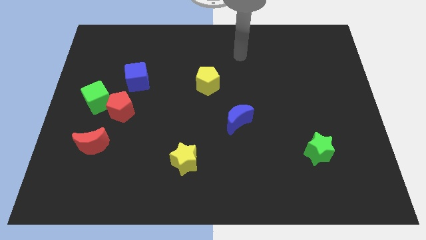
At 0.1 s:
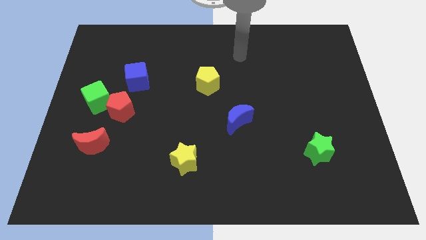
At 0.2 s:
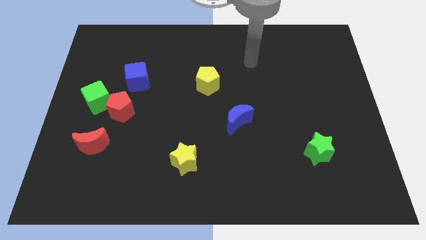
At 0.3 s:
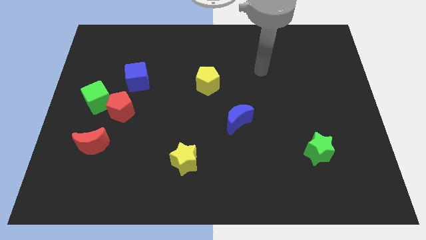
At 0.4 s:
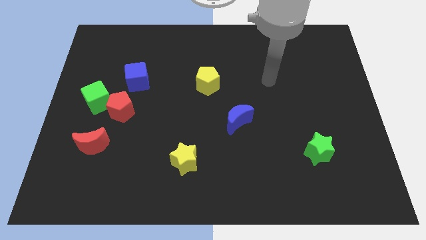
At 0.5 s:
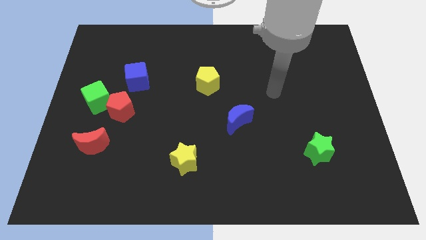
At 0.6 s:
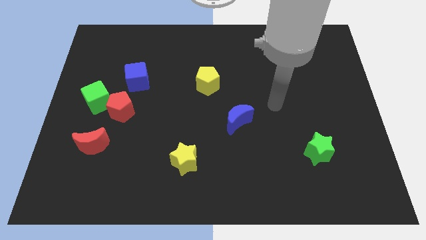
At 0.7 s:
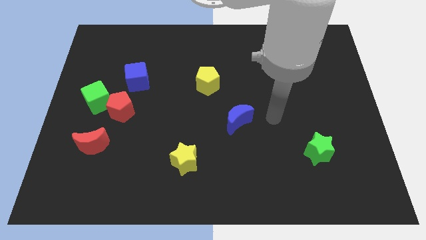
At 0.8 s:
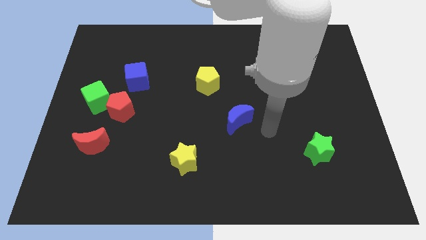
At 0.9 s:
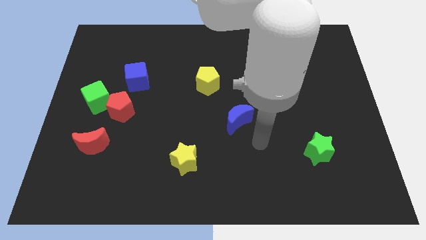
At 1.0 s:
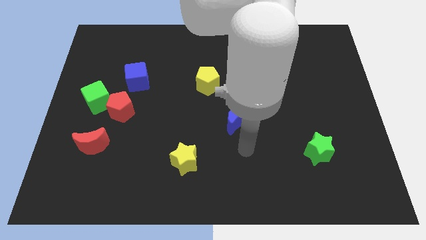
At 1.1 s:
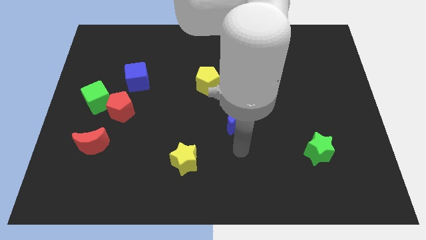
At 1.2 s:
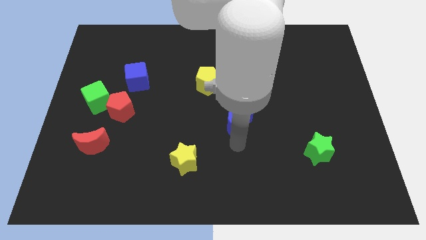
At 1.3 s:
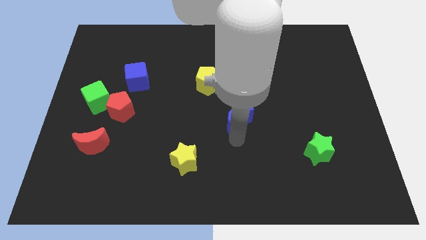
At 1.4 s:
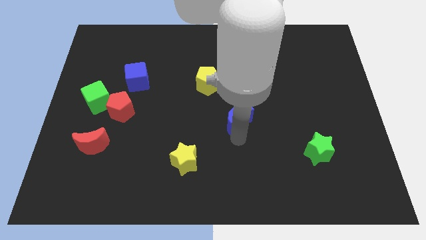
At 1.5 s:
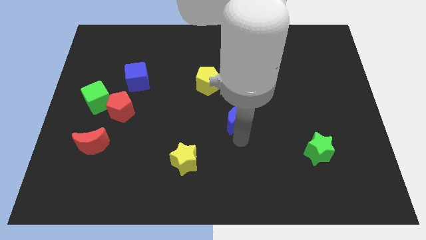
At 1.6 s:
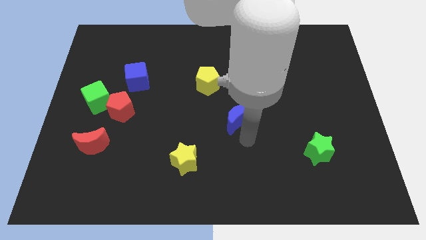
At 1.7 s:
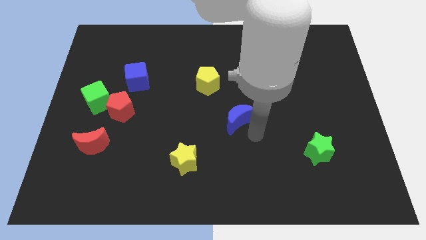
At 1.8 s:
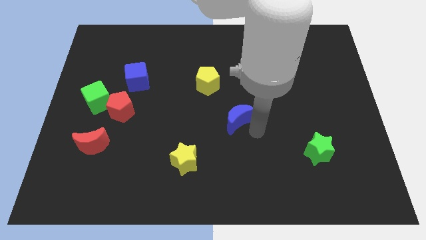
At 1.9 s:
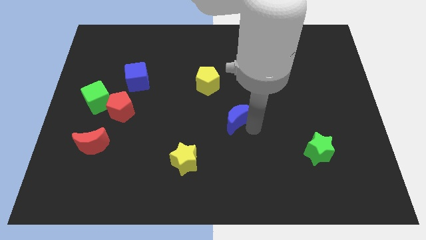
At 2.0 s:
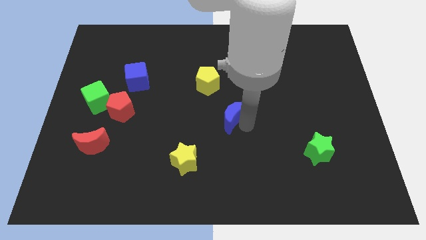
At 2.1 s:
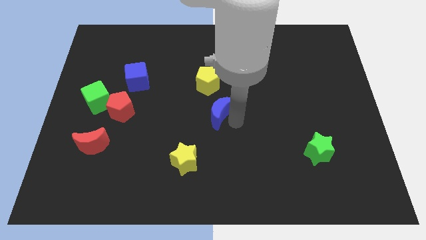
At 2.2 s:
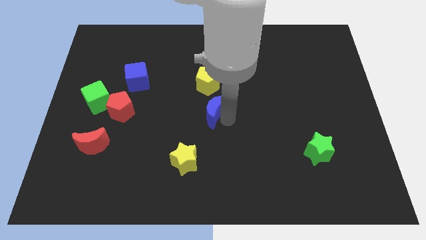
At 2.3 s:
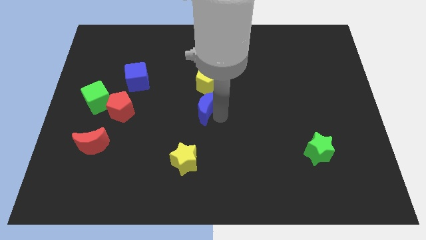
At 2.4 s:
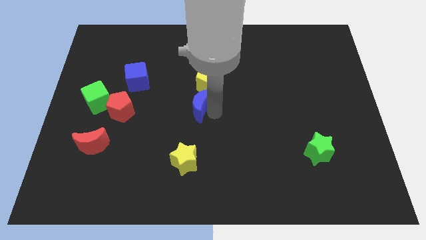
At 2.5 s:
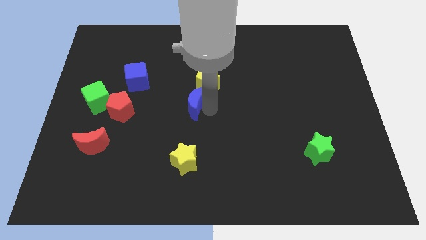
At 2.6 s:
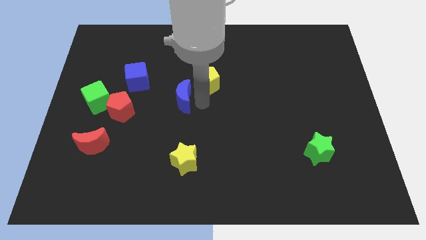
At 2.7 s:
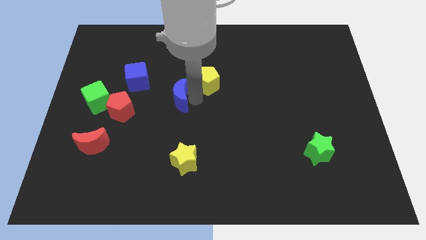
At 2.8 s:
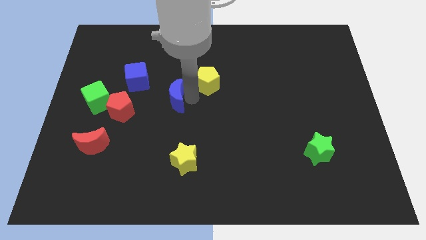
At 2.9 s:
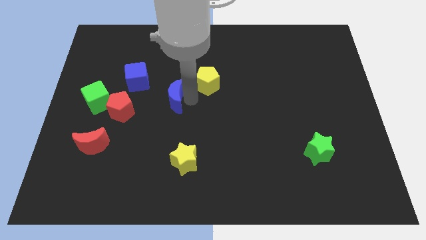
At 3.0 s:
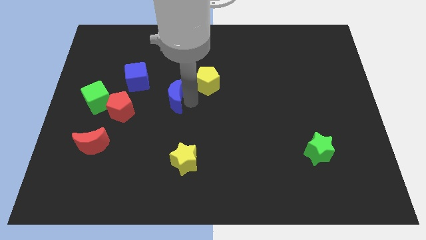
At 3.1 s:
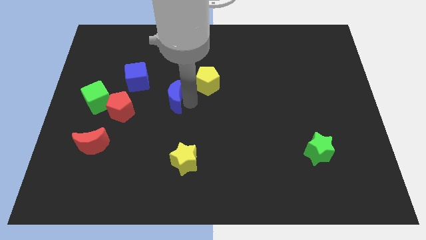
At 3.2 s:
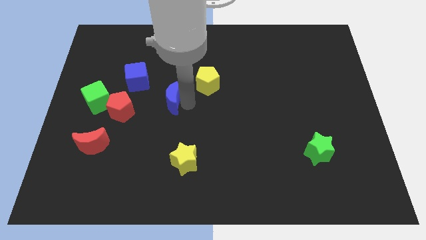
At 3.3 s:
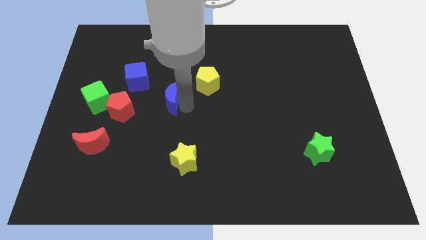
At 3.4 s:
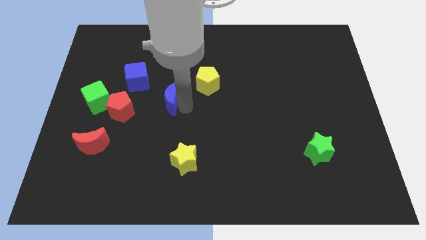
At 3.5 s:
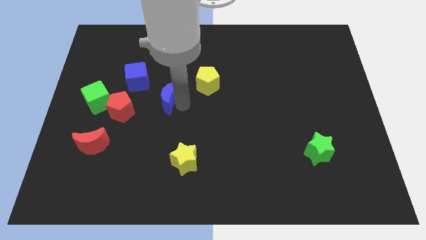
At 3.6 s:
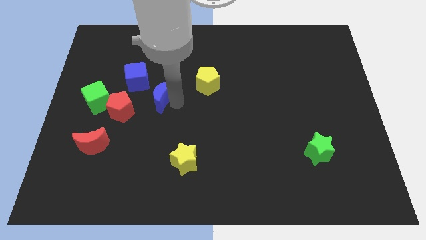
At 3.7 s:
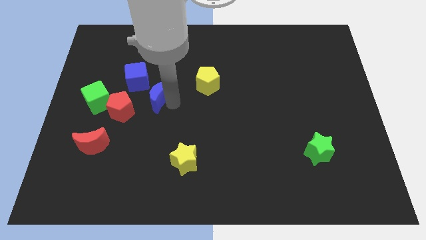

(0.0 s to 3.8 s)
move the blue crescent to the bottom right of blue cube

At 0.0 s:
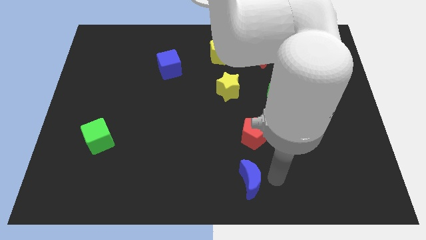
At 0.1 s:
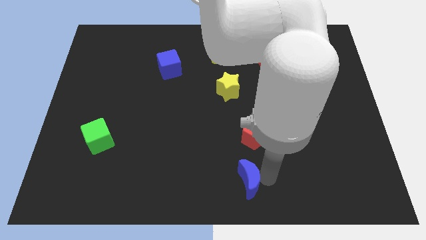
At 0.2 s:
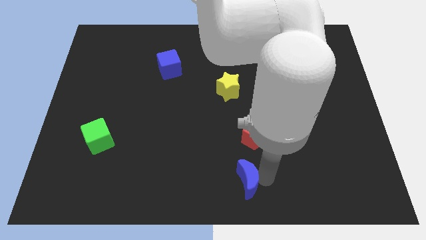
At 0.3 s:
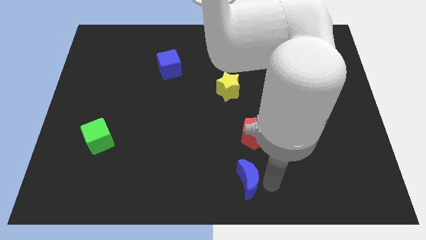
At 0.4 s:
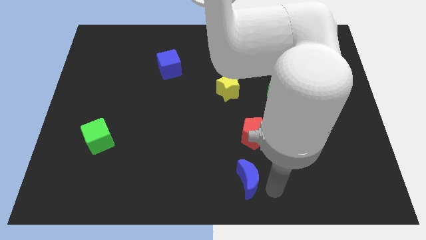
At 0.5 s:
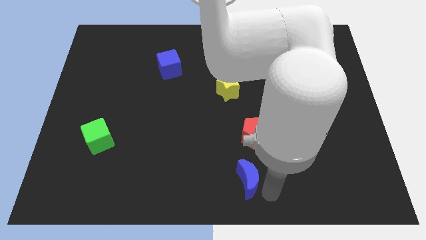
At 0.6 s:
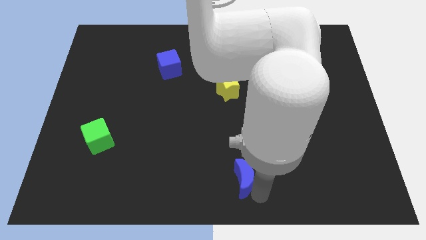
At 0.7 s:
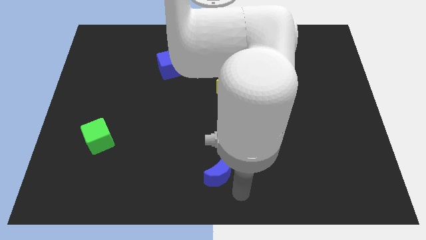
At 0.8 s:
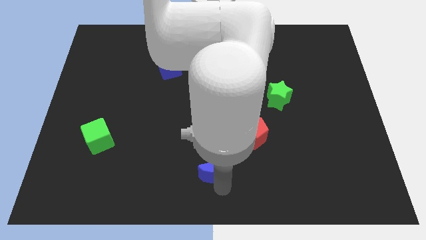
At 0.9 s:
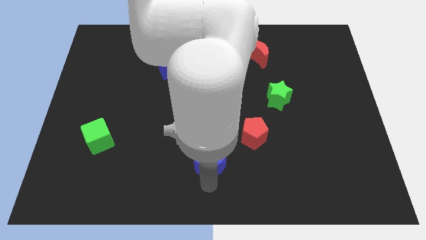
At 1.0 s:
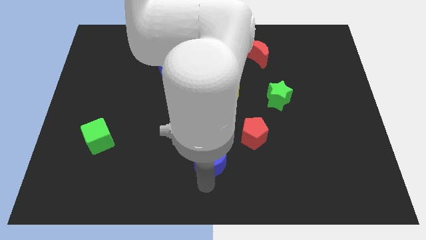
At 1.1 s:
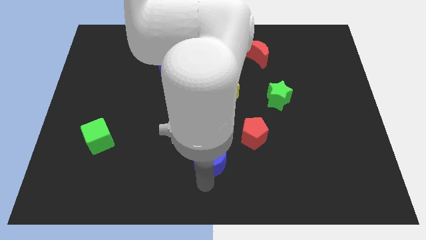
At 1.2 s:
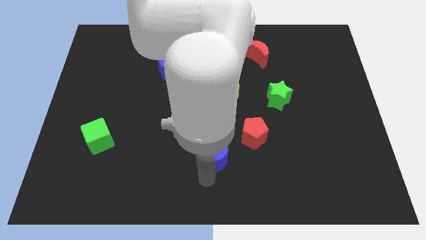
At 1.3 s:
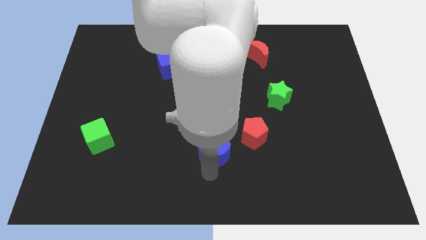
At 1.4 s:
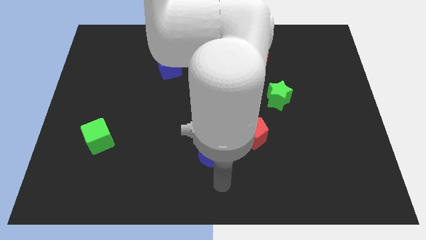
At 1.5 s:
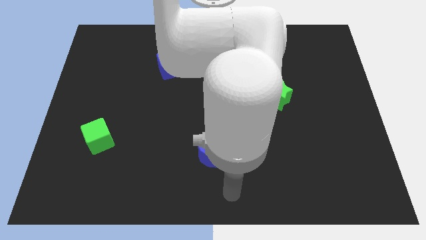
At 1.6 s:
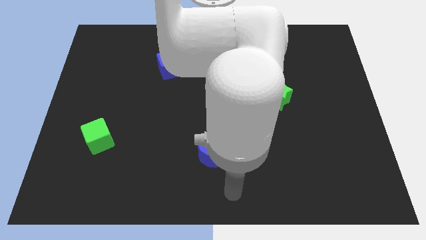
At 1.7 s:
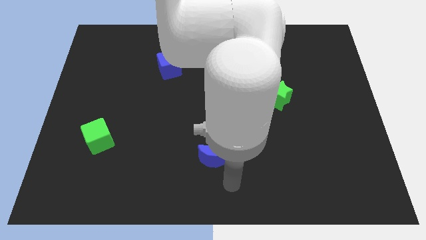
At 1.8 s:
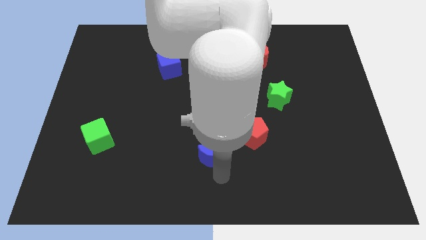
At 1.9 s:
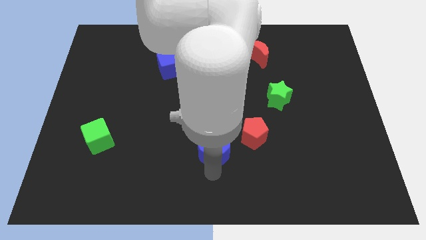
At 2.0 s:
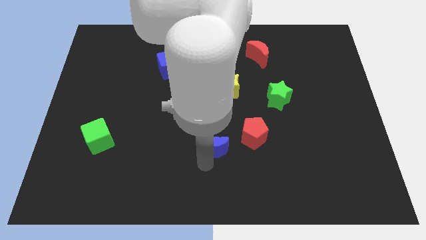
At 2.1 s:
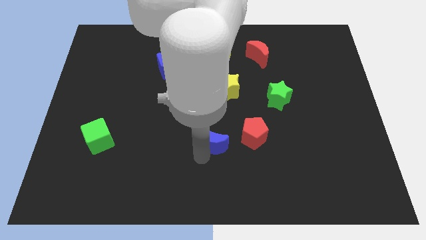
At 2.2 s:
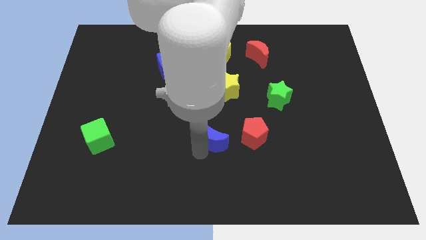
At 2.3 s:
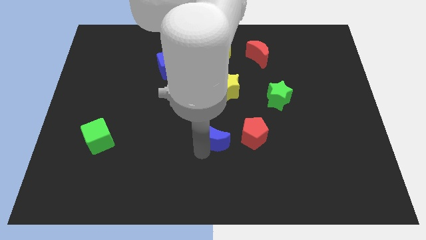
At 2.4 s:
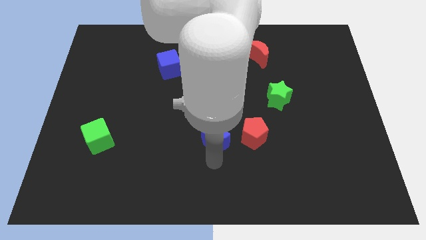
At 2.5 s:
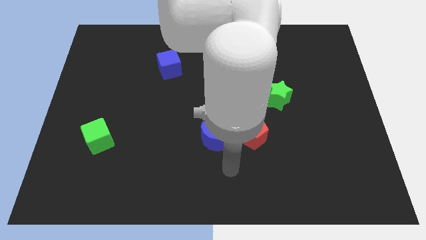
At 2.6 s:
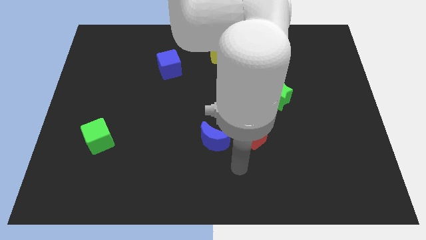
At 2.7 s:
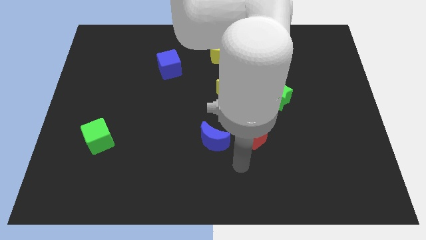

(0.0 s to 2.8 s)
move the blue crescent left to the red pentagon

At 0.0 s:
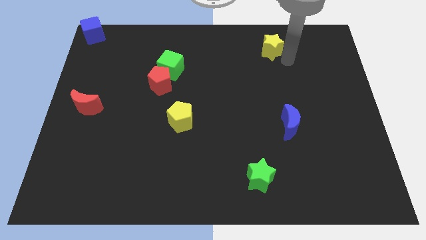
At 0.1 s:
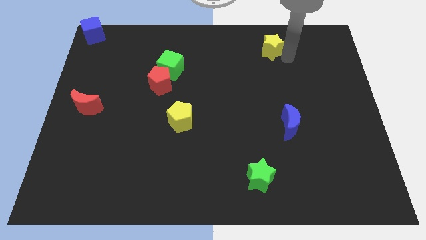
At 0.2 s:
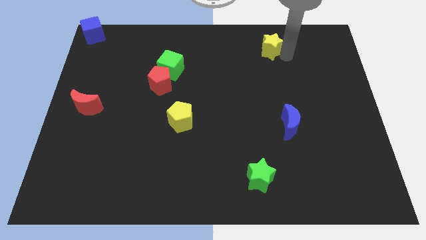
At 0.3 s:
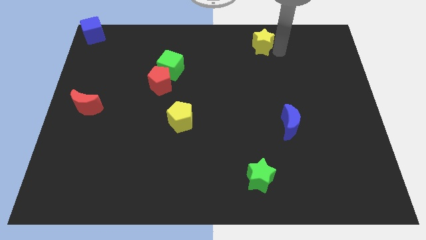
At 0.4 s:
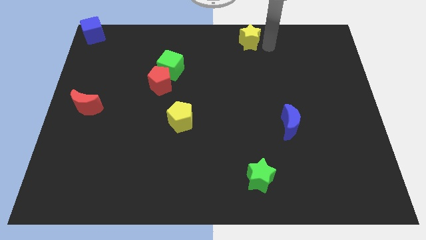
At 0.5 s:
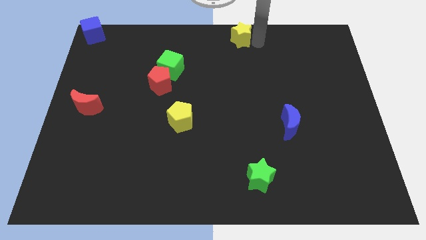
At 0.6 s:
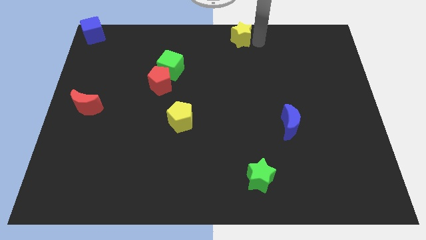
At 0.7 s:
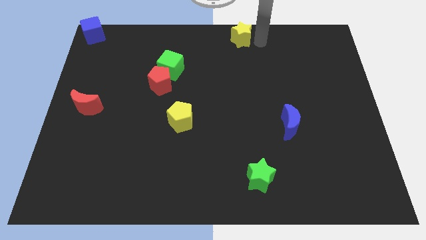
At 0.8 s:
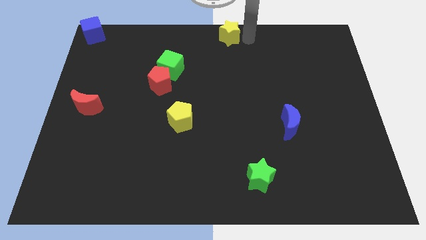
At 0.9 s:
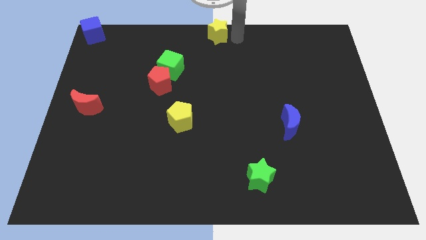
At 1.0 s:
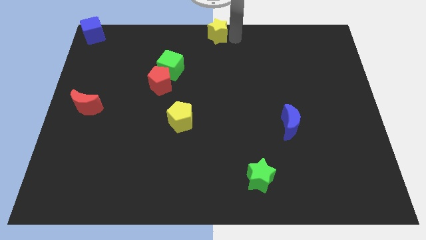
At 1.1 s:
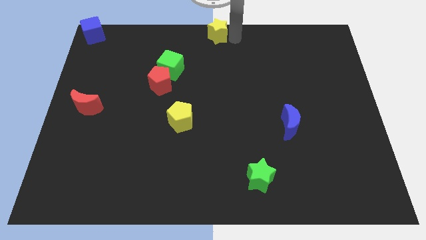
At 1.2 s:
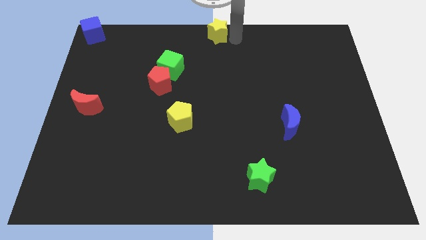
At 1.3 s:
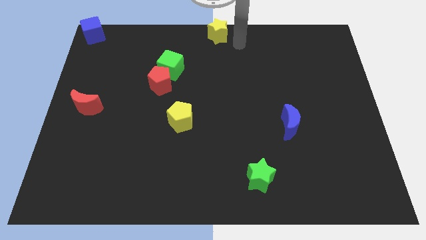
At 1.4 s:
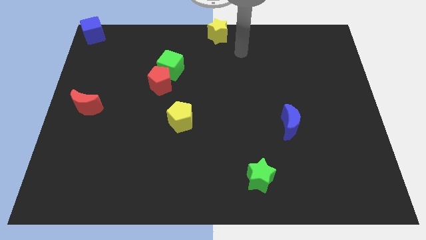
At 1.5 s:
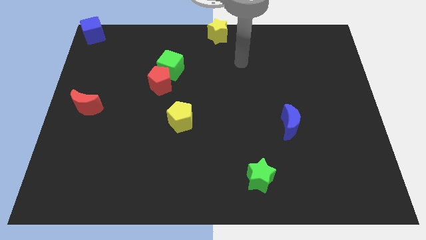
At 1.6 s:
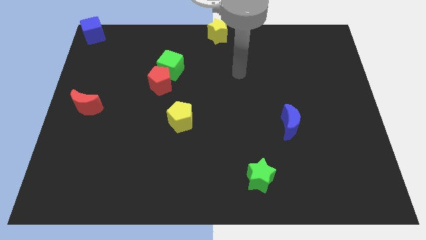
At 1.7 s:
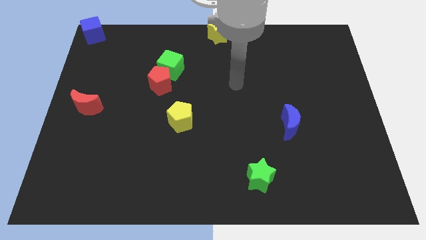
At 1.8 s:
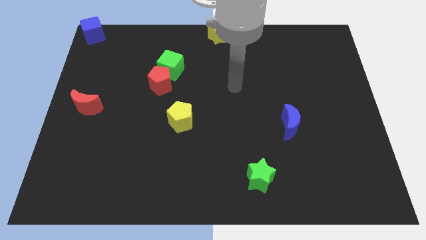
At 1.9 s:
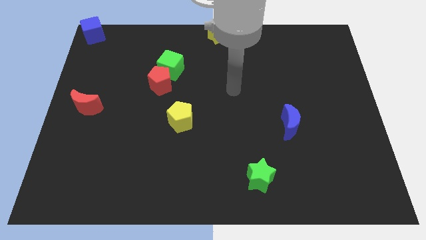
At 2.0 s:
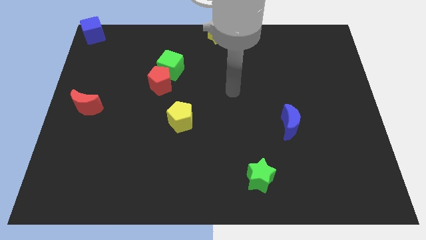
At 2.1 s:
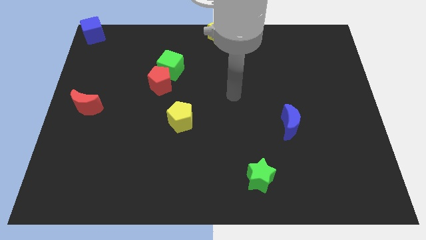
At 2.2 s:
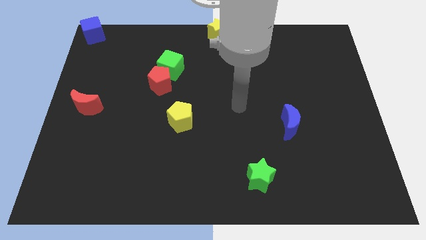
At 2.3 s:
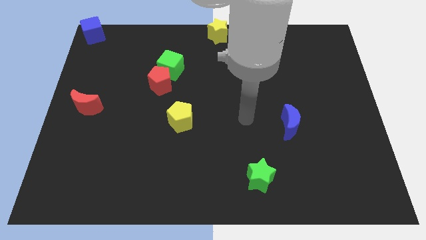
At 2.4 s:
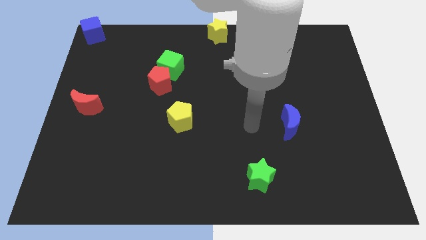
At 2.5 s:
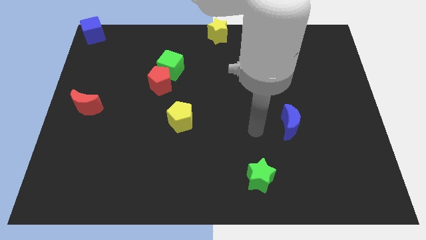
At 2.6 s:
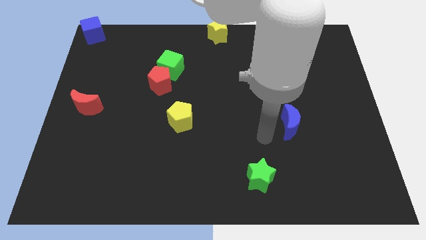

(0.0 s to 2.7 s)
place the yellow star on the top center of the board
